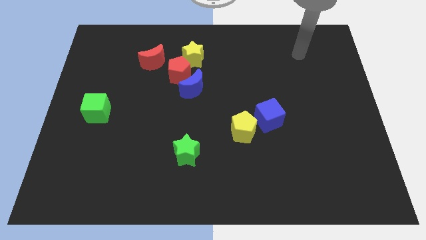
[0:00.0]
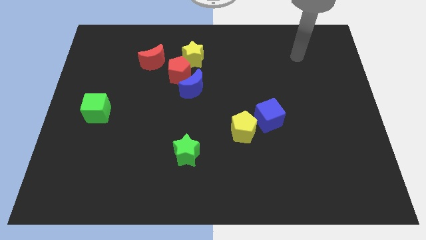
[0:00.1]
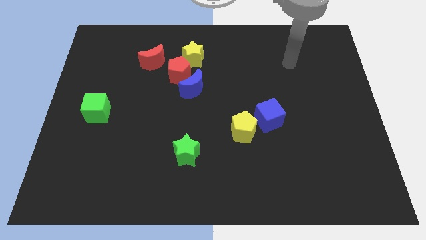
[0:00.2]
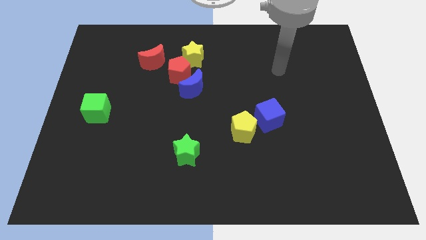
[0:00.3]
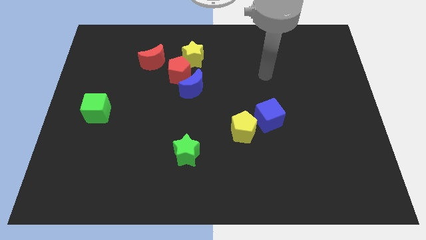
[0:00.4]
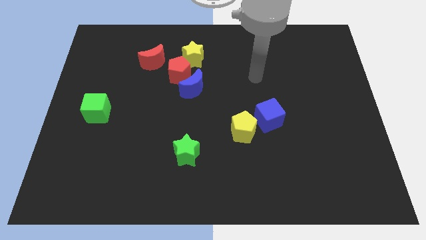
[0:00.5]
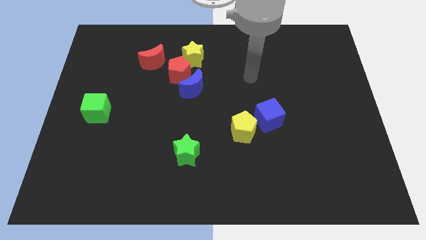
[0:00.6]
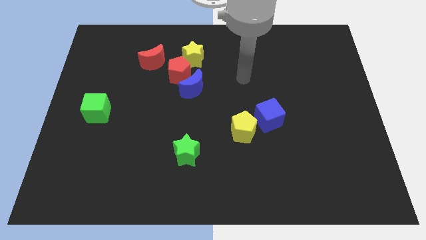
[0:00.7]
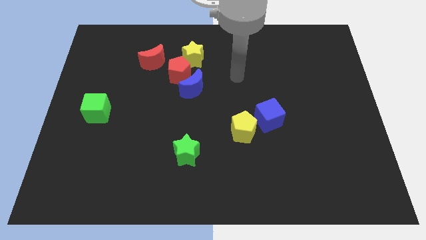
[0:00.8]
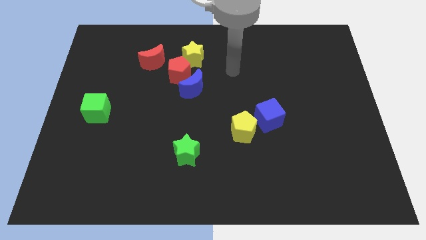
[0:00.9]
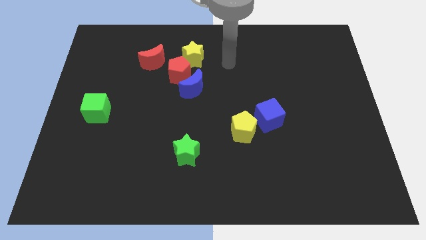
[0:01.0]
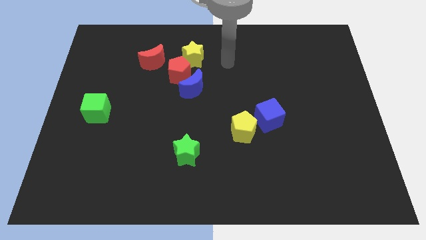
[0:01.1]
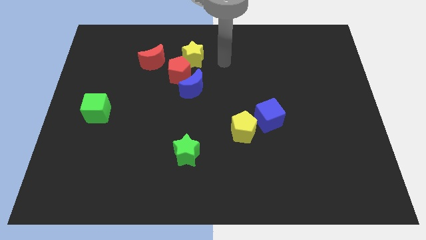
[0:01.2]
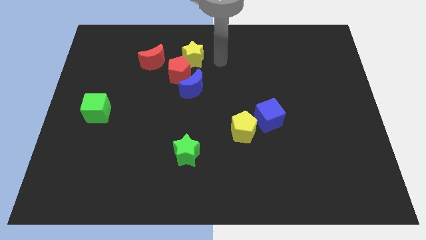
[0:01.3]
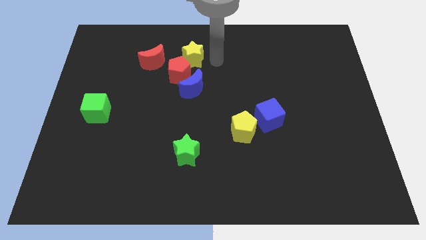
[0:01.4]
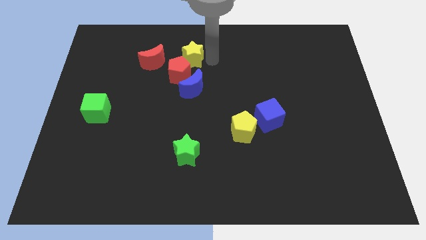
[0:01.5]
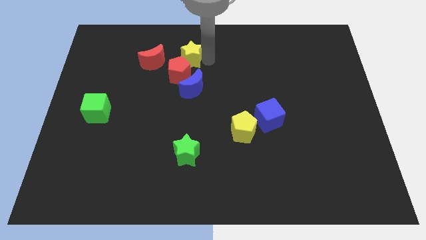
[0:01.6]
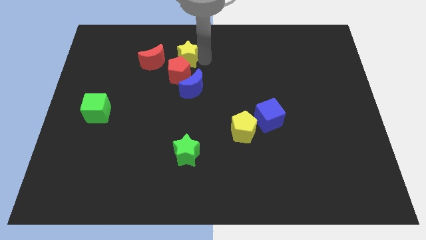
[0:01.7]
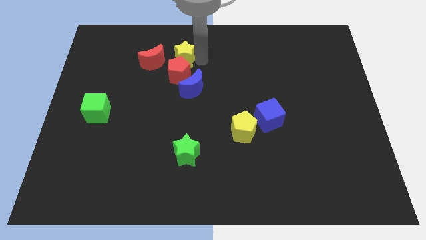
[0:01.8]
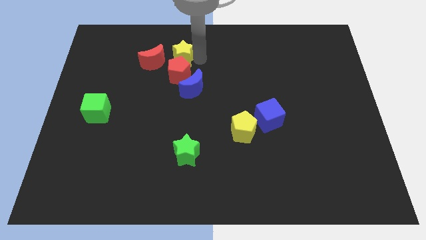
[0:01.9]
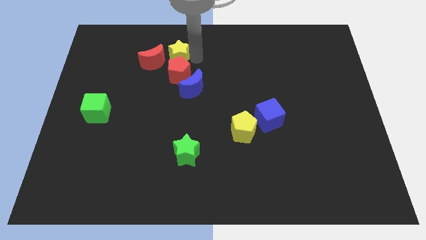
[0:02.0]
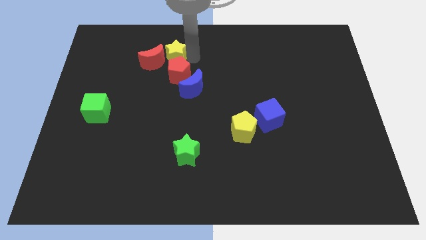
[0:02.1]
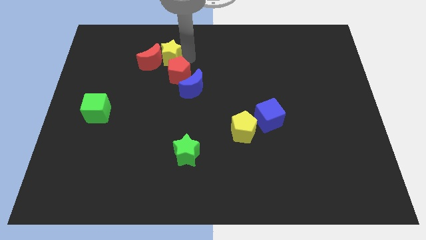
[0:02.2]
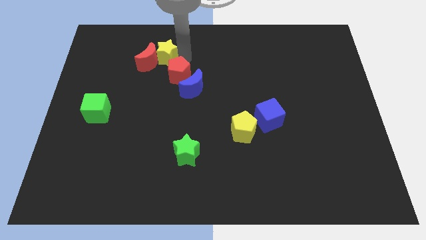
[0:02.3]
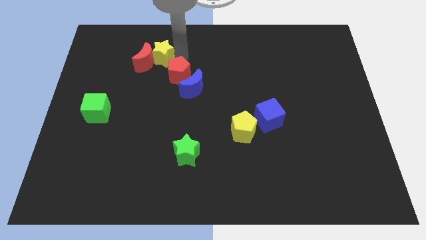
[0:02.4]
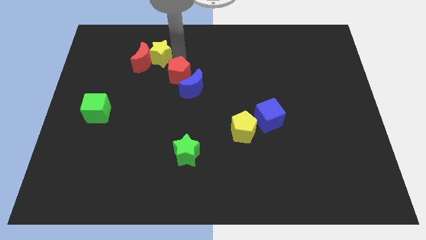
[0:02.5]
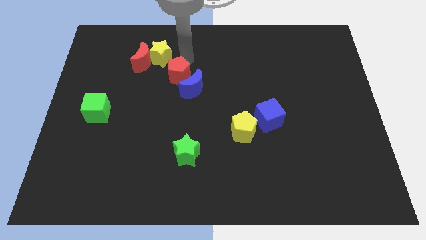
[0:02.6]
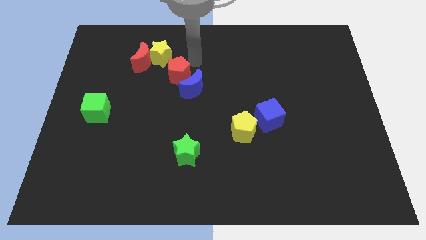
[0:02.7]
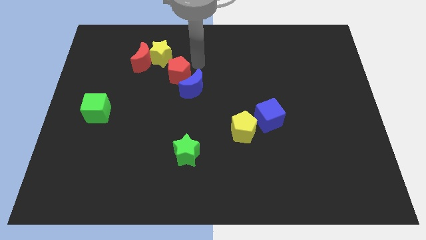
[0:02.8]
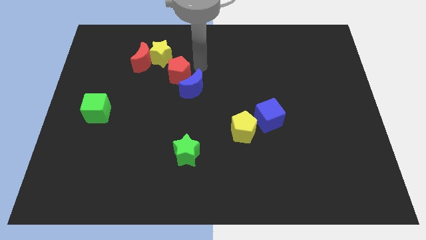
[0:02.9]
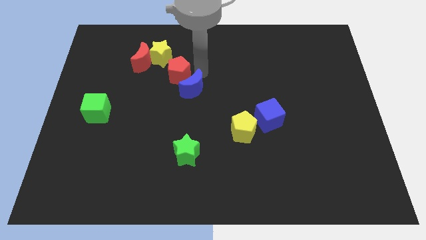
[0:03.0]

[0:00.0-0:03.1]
push yellow star into the red crescent

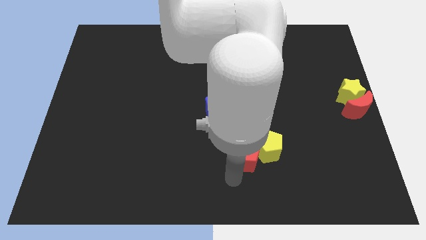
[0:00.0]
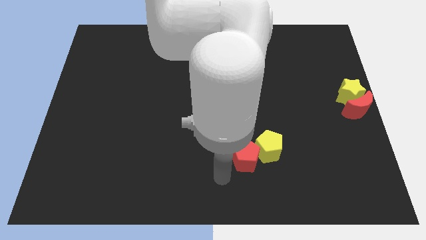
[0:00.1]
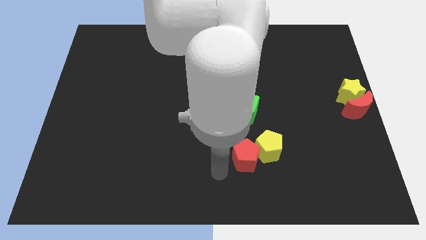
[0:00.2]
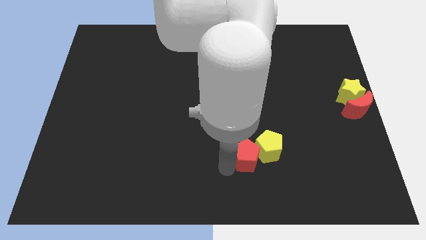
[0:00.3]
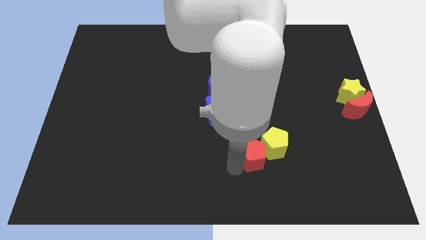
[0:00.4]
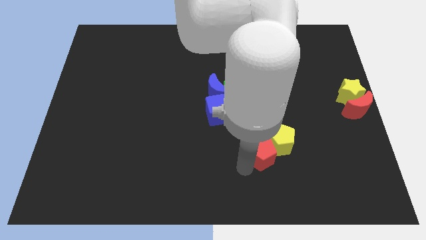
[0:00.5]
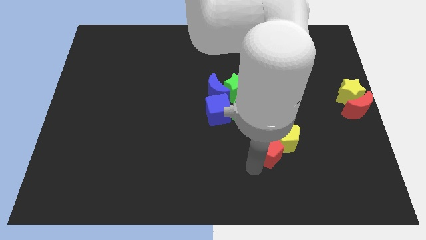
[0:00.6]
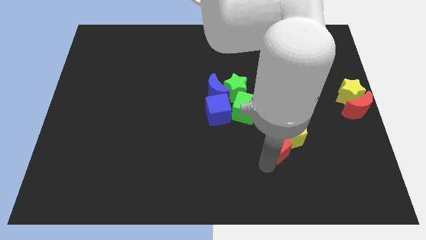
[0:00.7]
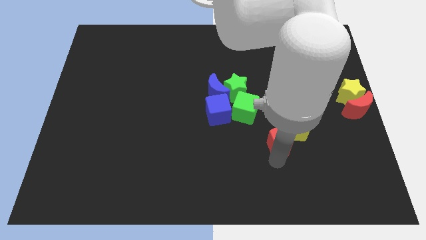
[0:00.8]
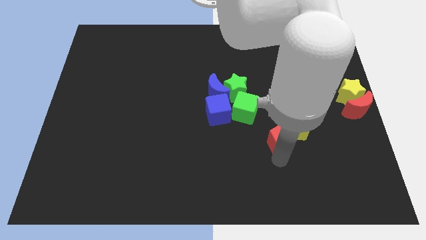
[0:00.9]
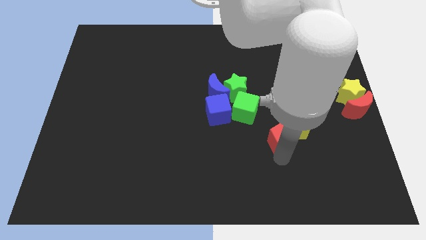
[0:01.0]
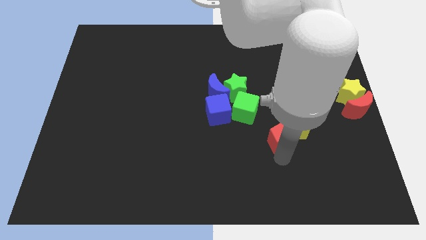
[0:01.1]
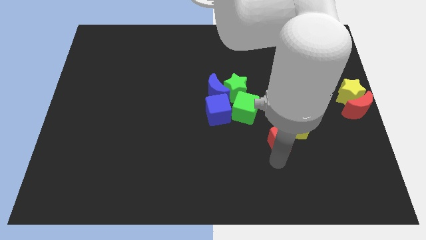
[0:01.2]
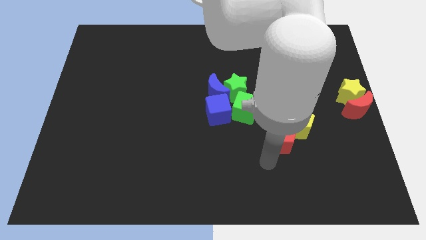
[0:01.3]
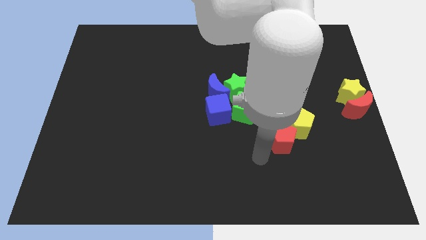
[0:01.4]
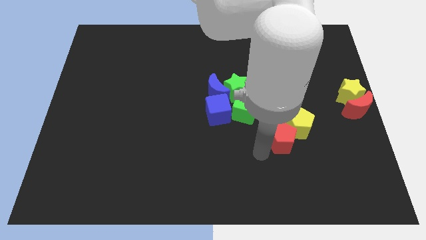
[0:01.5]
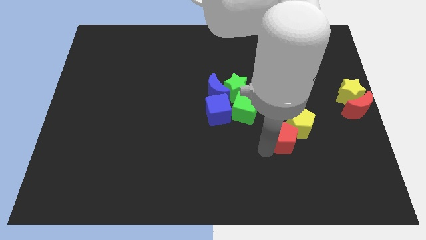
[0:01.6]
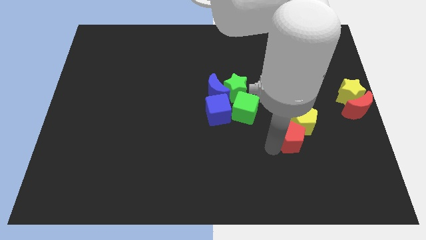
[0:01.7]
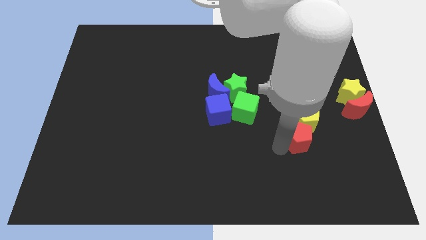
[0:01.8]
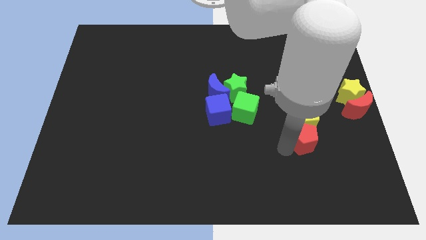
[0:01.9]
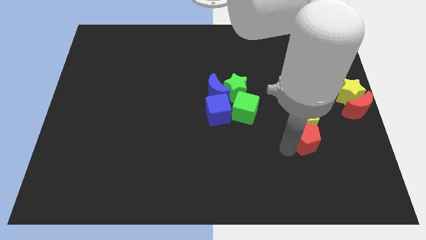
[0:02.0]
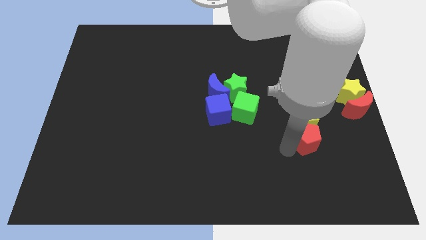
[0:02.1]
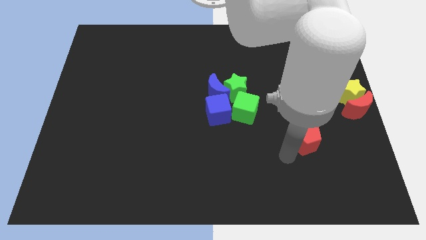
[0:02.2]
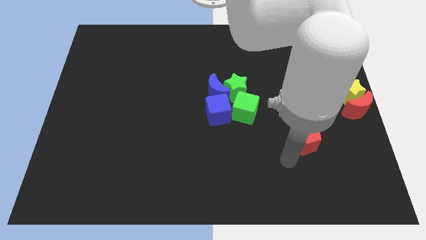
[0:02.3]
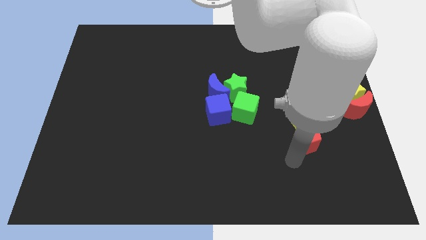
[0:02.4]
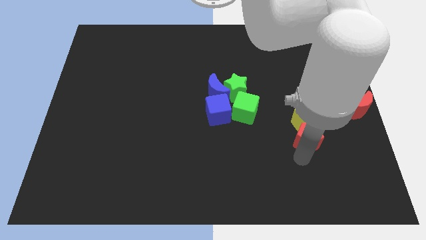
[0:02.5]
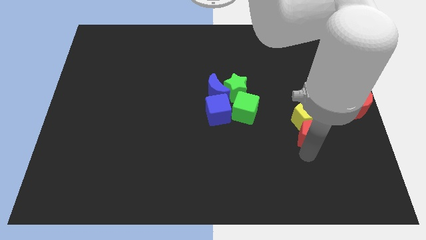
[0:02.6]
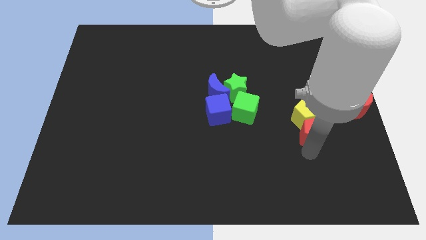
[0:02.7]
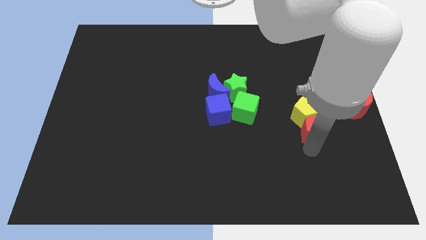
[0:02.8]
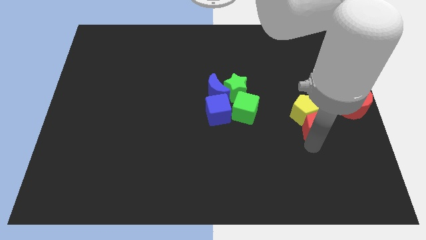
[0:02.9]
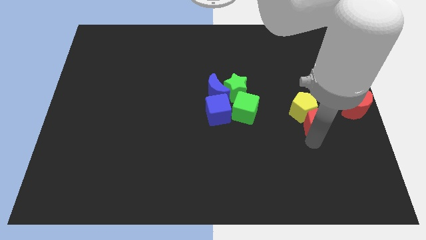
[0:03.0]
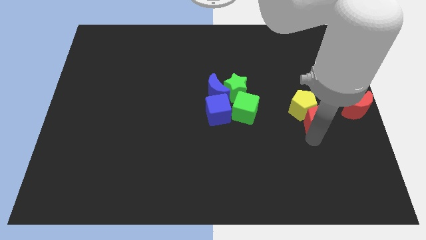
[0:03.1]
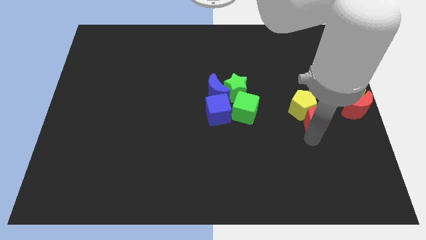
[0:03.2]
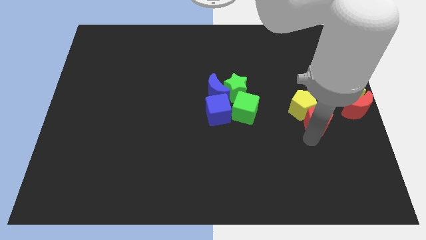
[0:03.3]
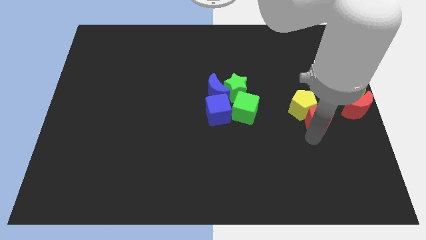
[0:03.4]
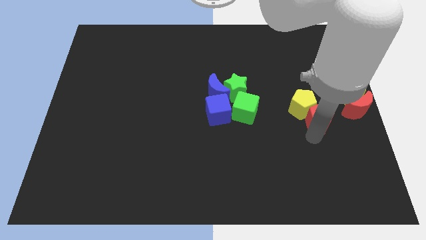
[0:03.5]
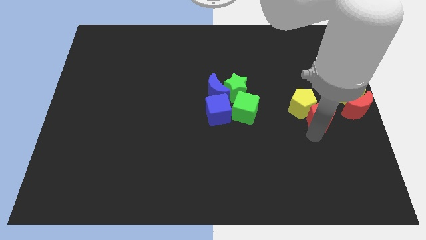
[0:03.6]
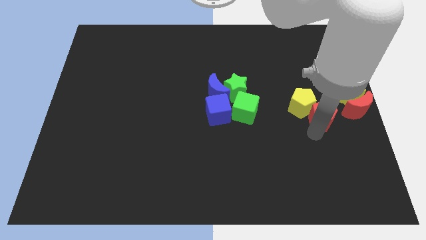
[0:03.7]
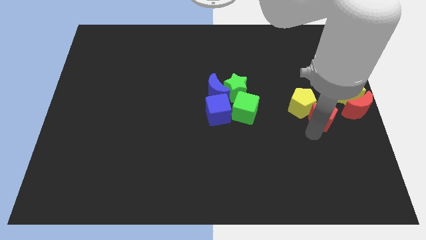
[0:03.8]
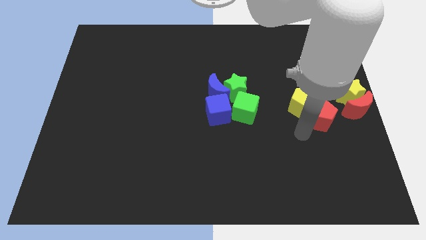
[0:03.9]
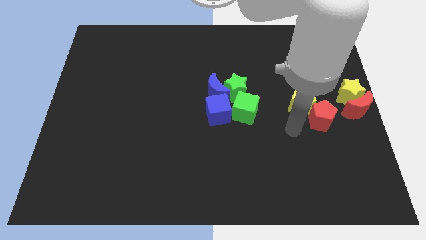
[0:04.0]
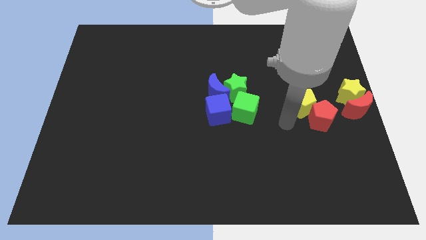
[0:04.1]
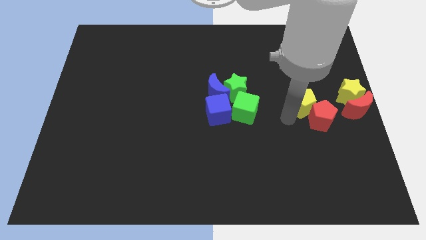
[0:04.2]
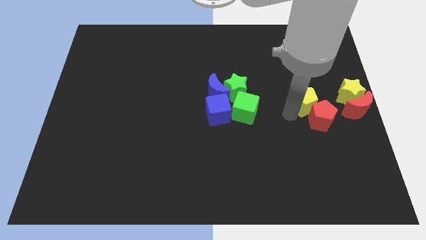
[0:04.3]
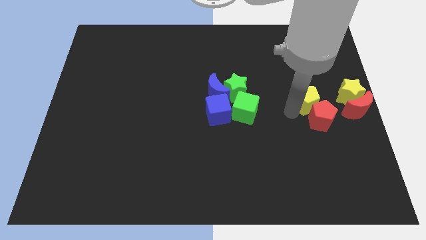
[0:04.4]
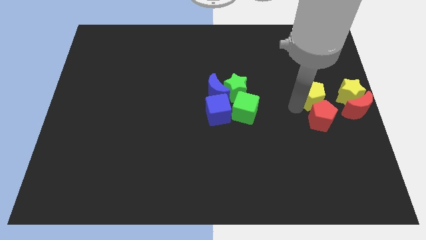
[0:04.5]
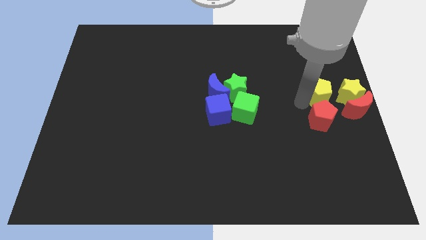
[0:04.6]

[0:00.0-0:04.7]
move the red and yellow pentagon to the center right

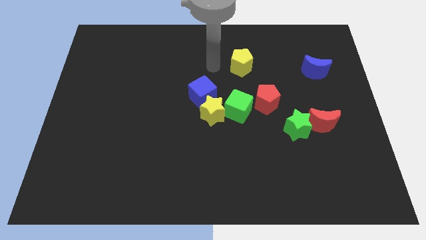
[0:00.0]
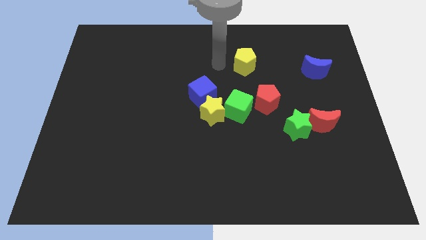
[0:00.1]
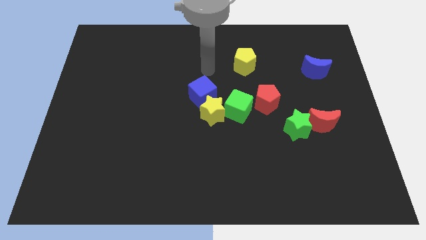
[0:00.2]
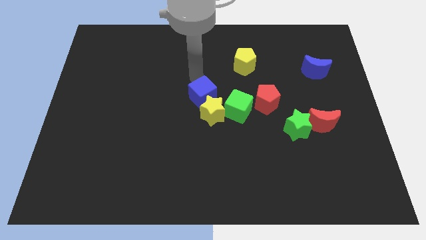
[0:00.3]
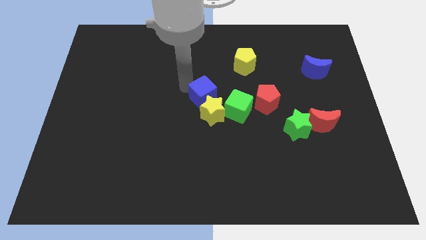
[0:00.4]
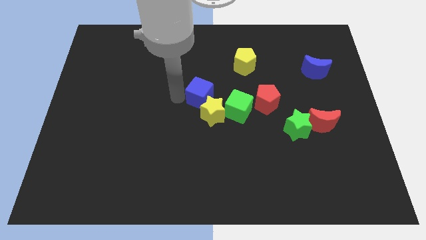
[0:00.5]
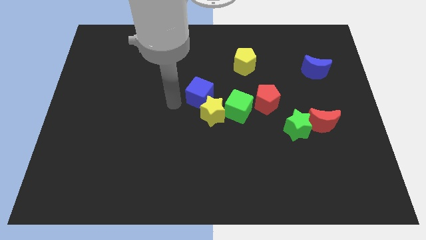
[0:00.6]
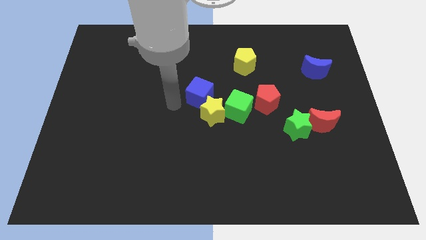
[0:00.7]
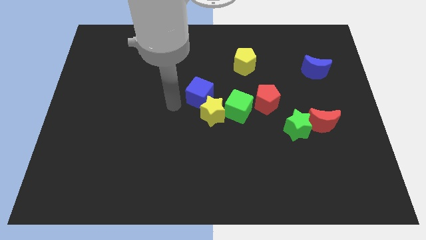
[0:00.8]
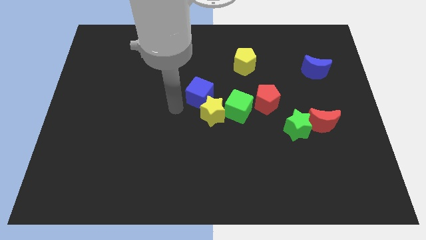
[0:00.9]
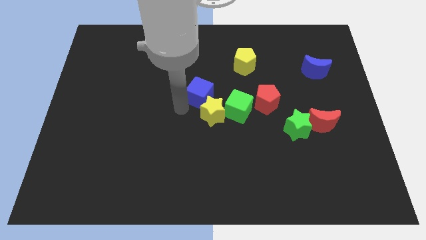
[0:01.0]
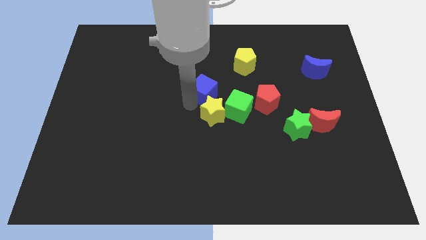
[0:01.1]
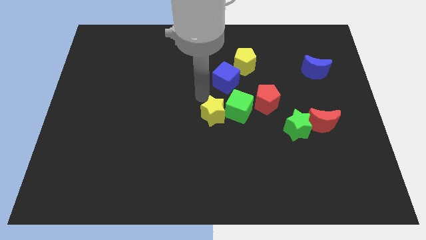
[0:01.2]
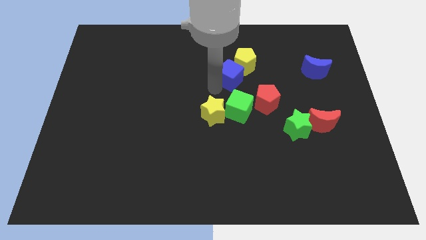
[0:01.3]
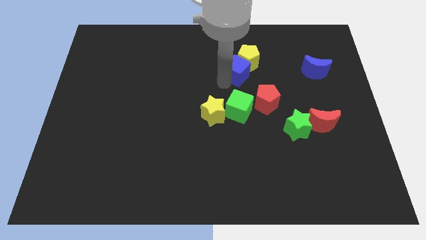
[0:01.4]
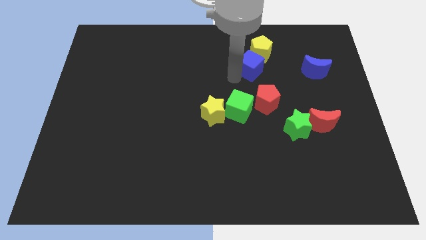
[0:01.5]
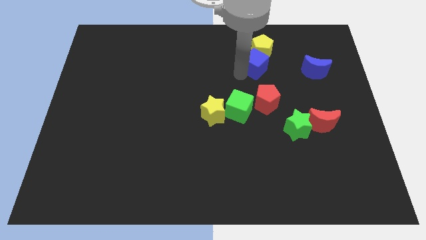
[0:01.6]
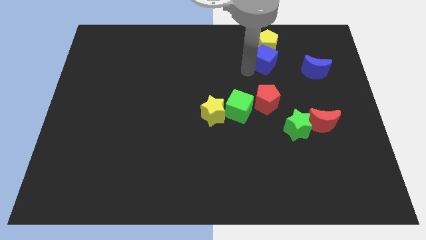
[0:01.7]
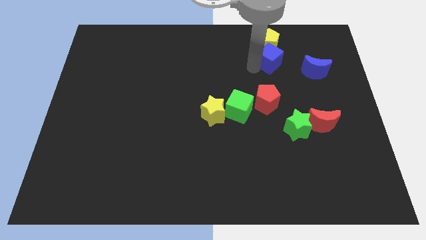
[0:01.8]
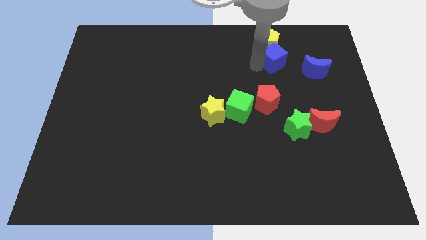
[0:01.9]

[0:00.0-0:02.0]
move the yellow pentagon and blue cube towards the top right
